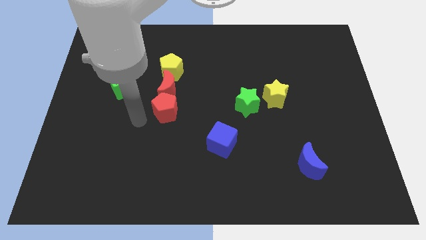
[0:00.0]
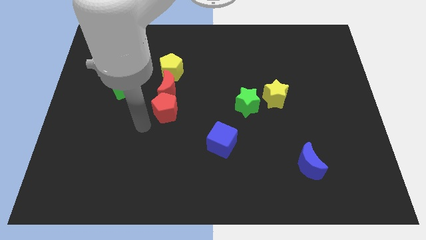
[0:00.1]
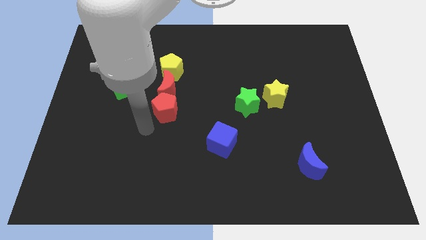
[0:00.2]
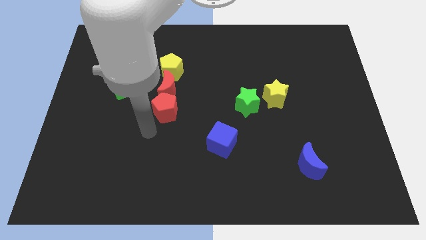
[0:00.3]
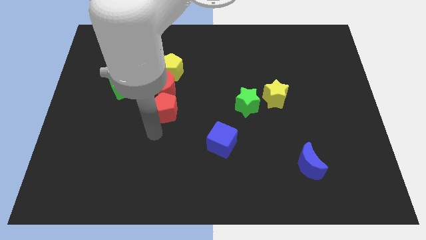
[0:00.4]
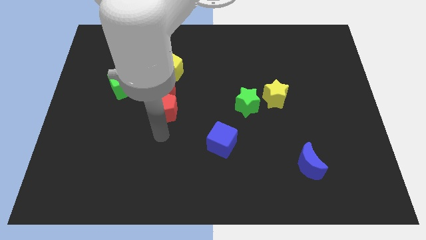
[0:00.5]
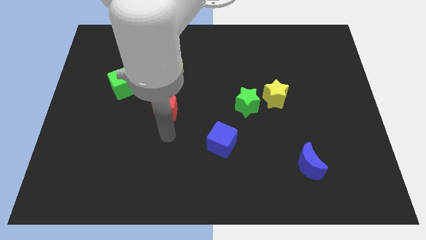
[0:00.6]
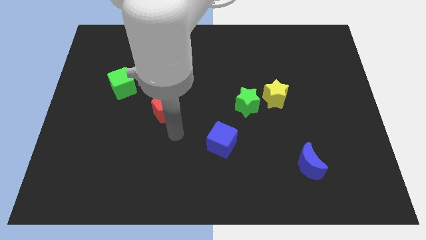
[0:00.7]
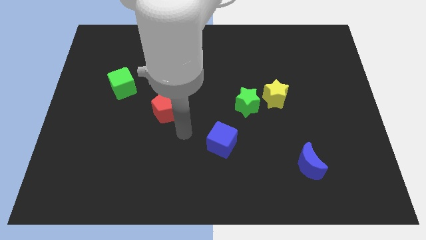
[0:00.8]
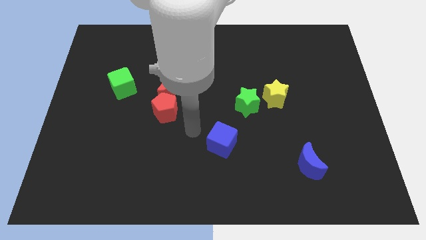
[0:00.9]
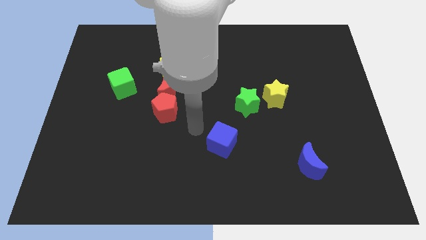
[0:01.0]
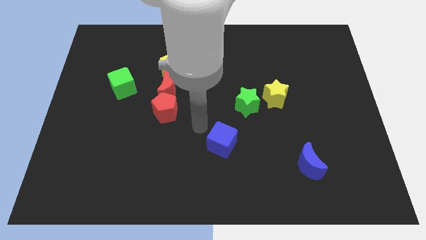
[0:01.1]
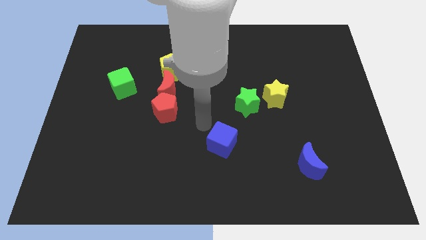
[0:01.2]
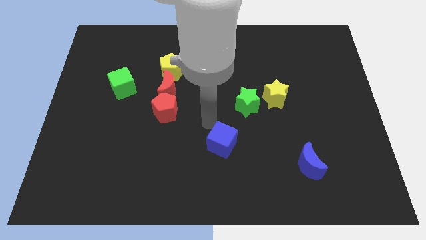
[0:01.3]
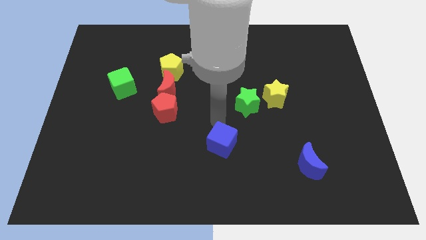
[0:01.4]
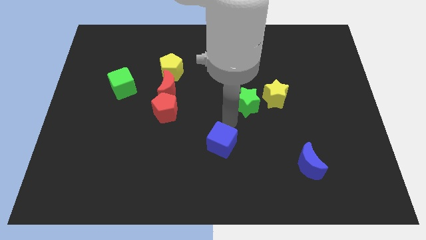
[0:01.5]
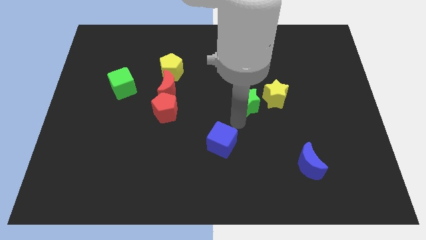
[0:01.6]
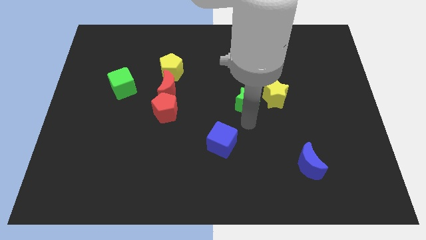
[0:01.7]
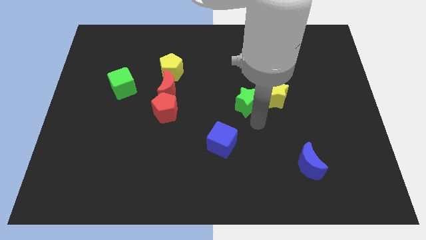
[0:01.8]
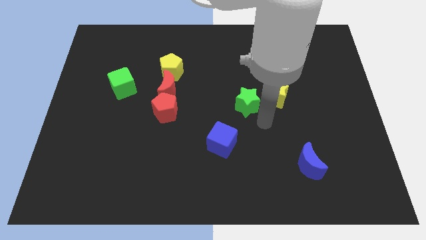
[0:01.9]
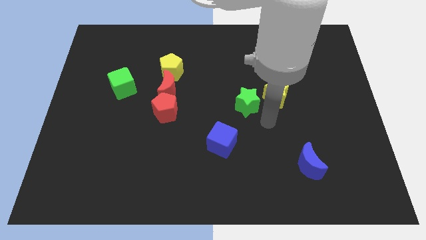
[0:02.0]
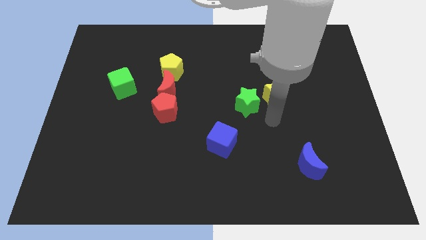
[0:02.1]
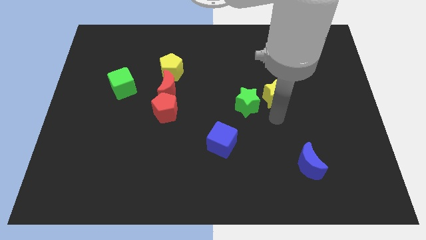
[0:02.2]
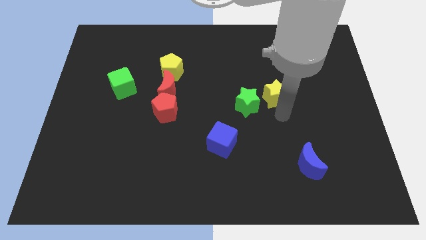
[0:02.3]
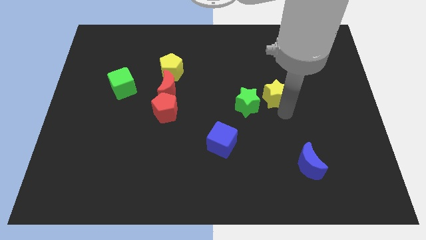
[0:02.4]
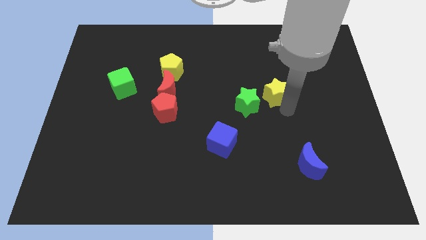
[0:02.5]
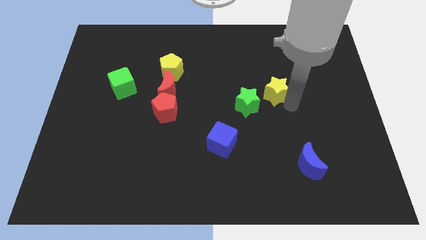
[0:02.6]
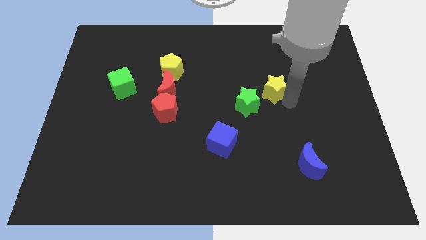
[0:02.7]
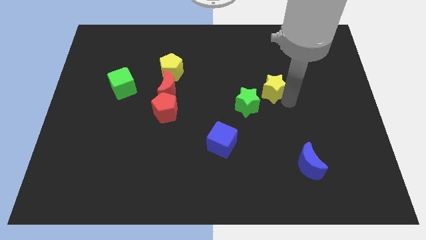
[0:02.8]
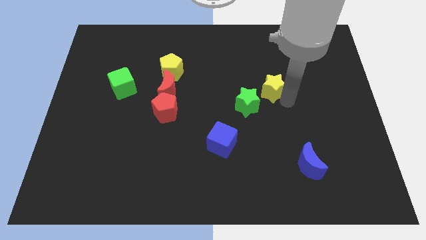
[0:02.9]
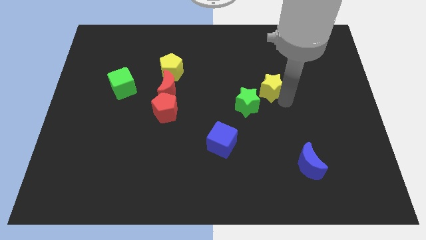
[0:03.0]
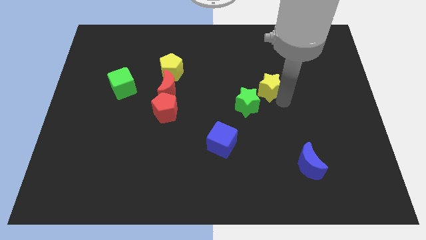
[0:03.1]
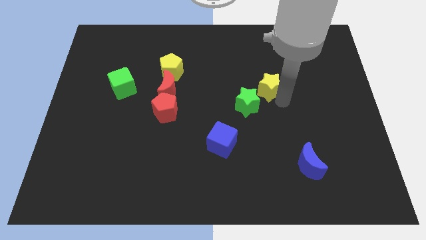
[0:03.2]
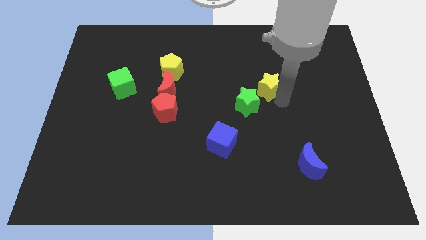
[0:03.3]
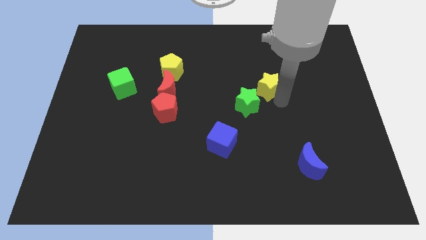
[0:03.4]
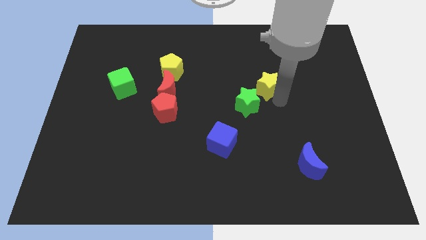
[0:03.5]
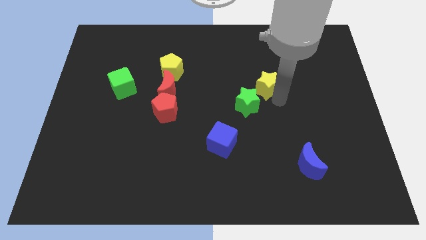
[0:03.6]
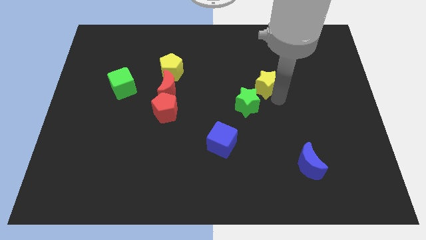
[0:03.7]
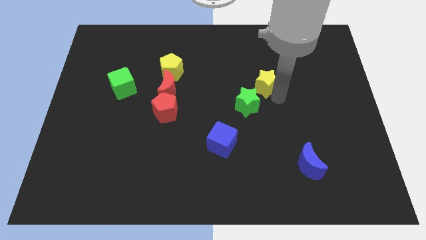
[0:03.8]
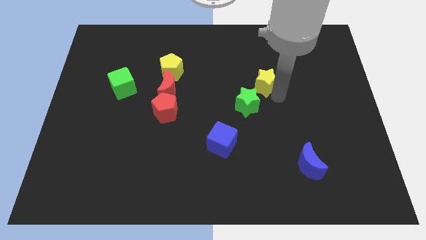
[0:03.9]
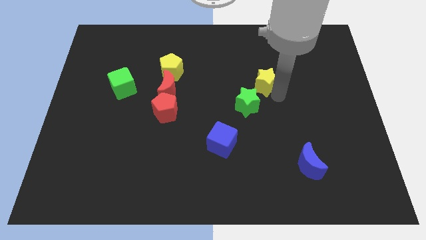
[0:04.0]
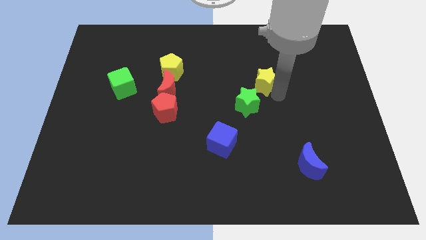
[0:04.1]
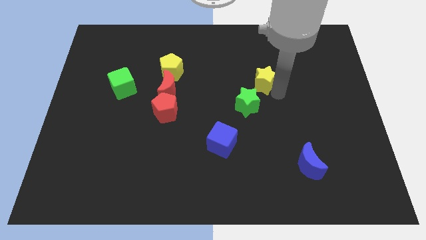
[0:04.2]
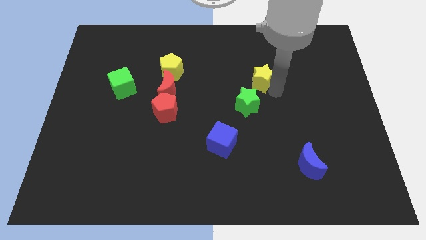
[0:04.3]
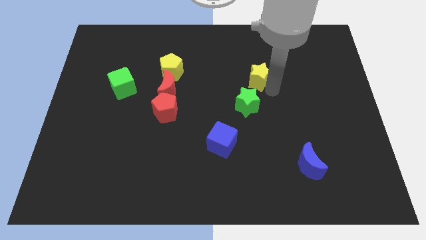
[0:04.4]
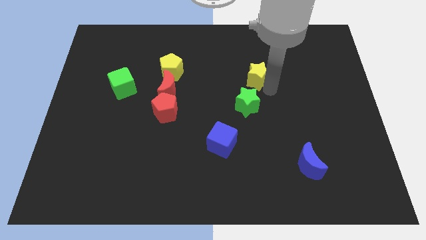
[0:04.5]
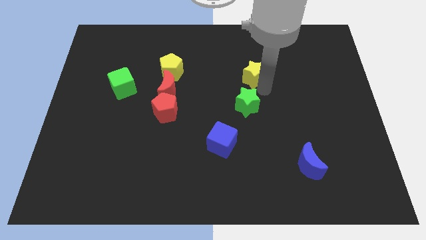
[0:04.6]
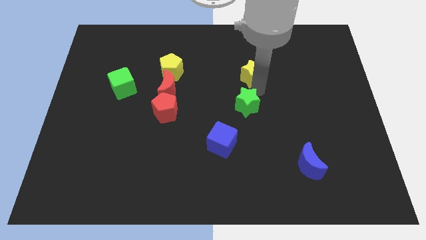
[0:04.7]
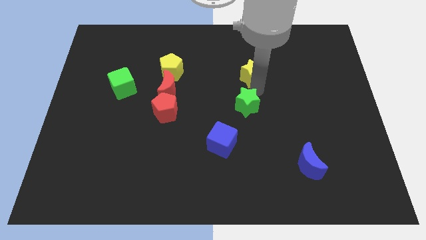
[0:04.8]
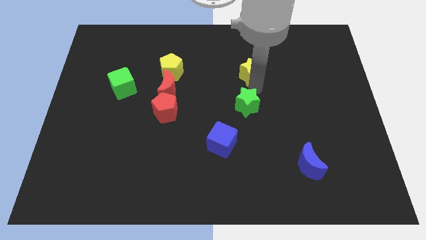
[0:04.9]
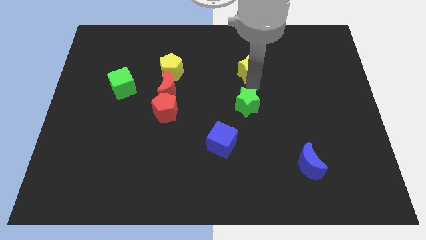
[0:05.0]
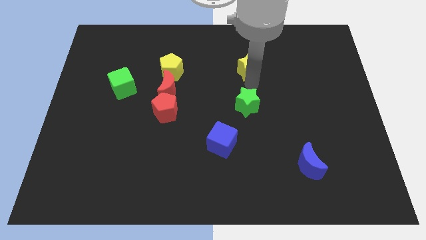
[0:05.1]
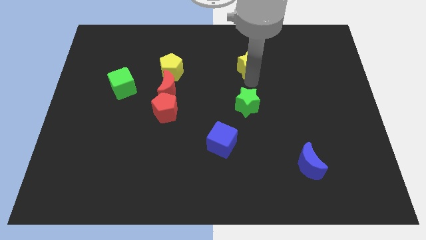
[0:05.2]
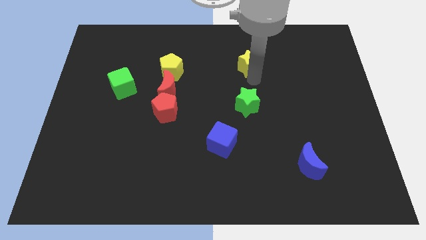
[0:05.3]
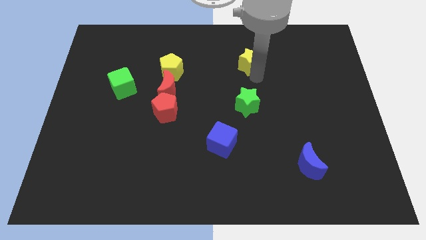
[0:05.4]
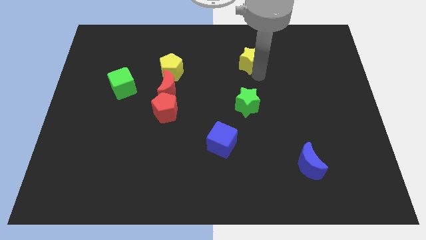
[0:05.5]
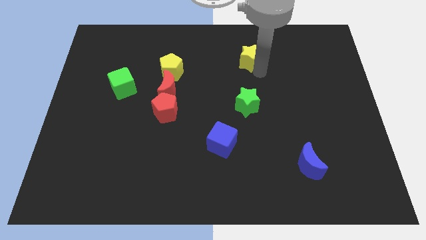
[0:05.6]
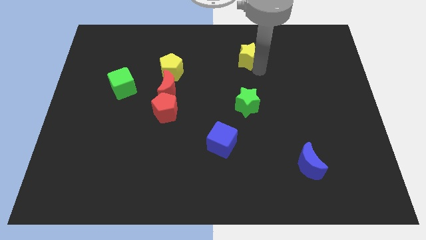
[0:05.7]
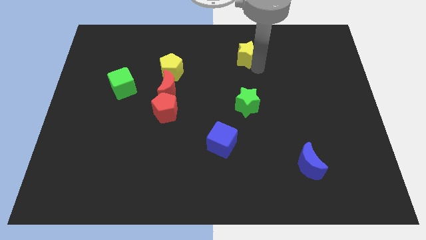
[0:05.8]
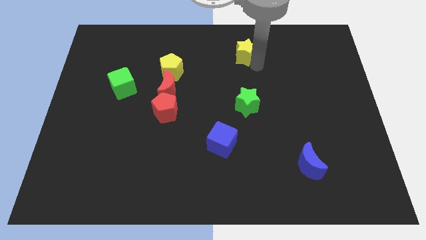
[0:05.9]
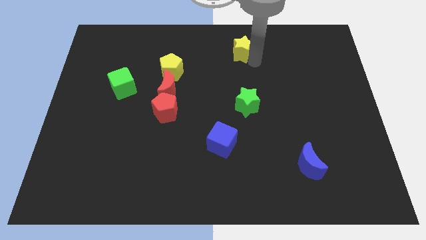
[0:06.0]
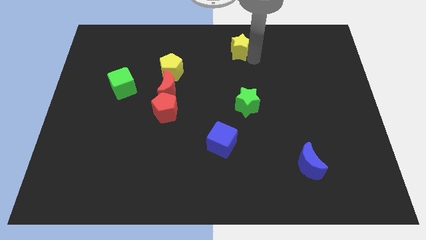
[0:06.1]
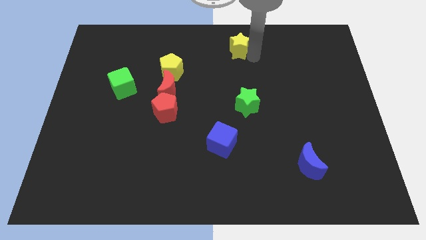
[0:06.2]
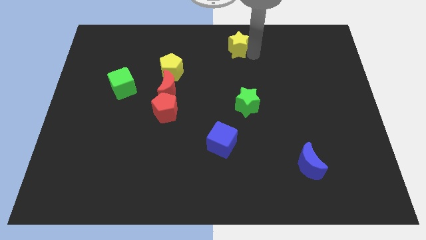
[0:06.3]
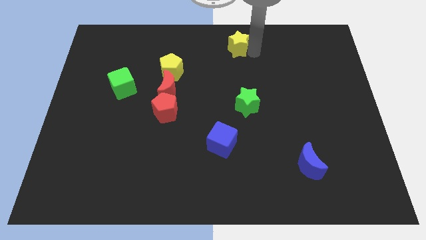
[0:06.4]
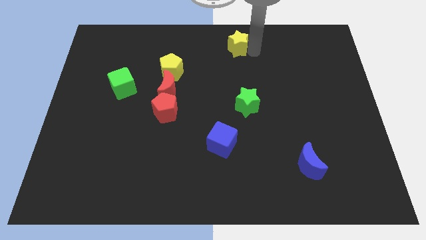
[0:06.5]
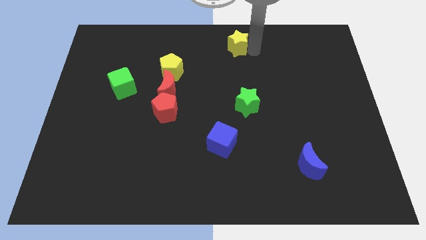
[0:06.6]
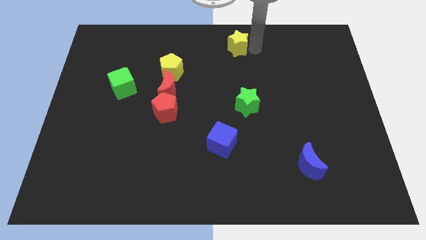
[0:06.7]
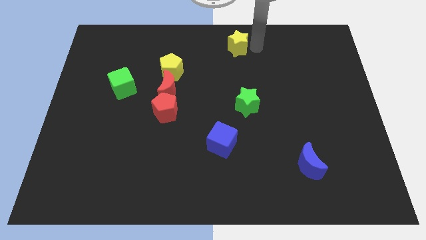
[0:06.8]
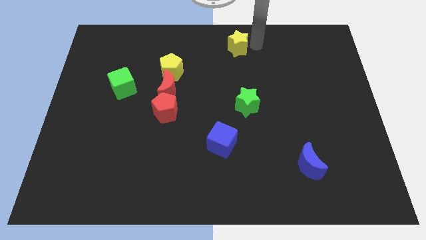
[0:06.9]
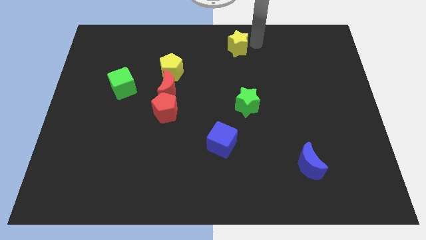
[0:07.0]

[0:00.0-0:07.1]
move the yellow star to the top center of board

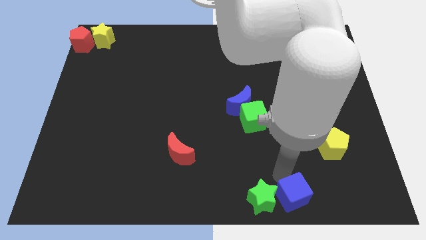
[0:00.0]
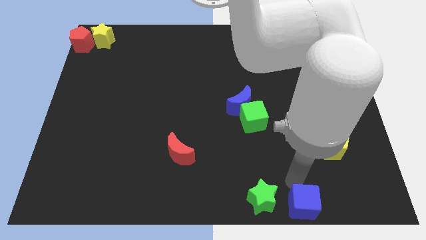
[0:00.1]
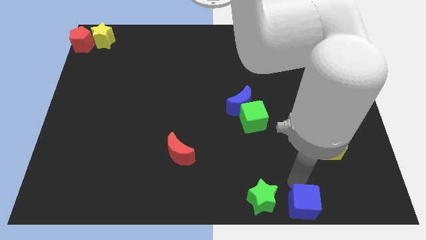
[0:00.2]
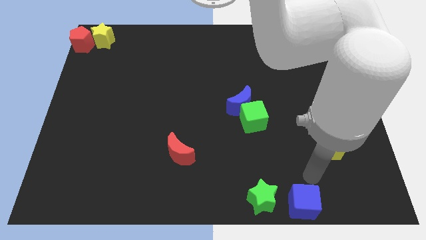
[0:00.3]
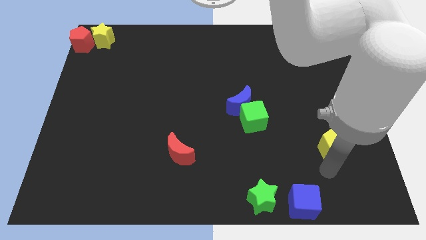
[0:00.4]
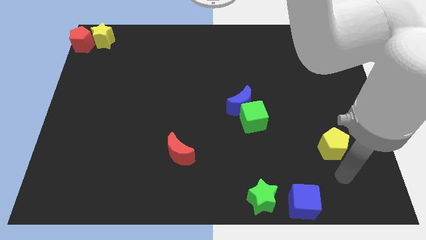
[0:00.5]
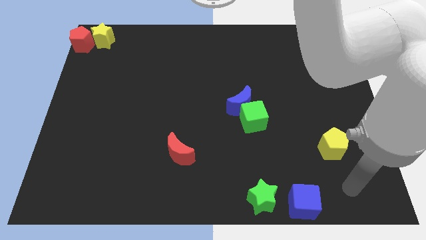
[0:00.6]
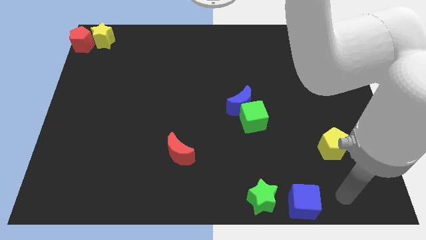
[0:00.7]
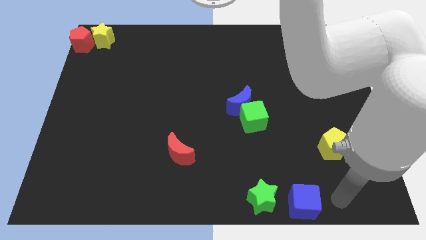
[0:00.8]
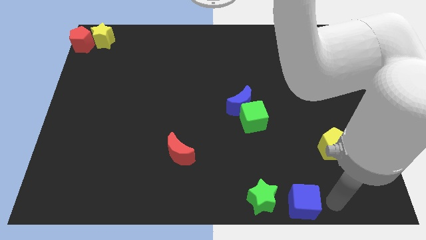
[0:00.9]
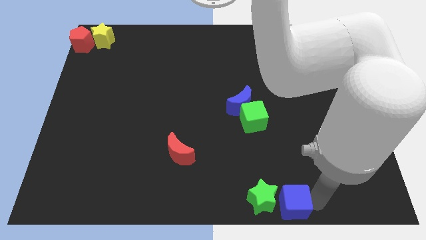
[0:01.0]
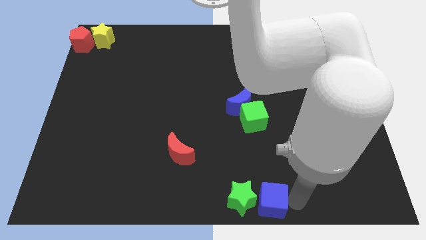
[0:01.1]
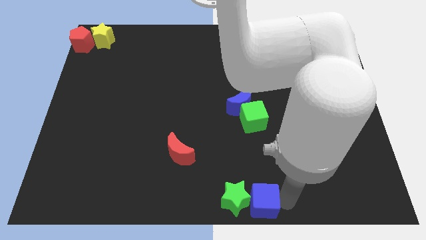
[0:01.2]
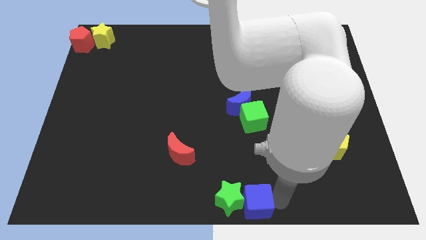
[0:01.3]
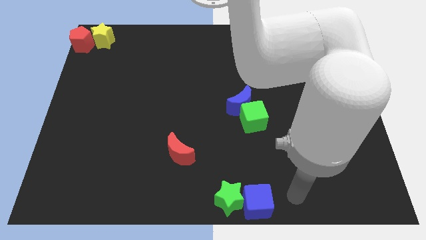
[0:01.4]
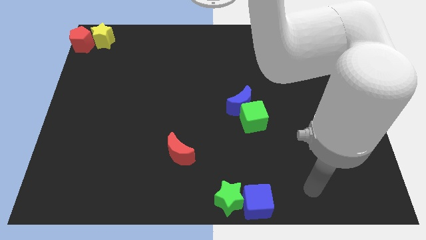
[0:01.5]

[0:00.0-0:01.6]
move the green star and the blue cube to the bottom center of the board

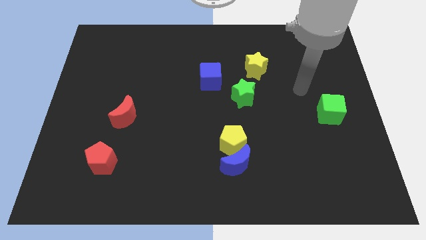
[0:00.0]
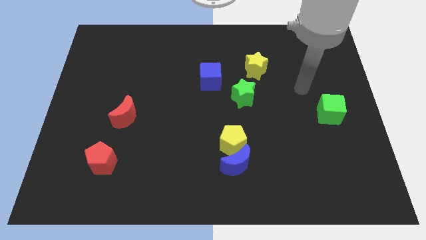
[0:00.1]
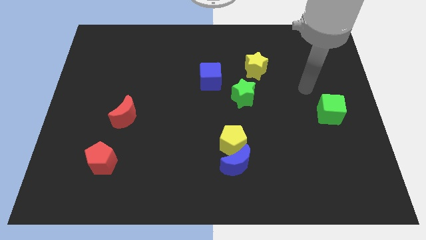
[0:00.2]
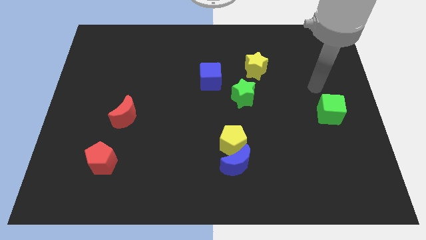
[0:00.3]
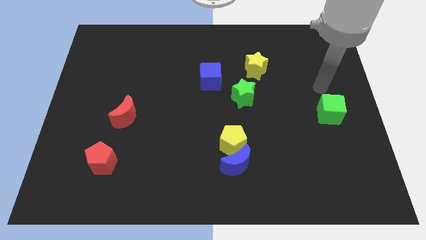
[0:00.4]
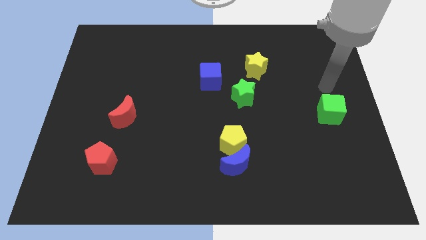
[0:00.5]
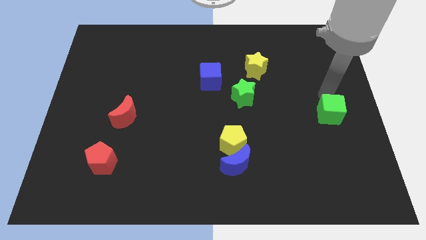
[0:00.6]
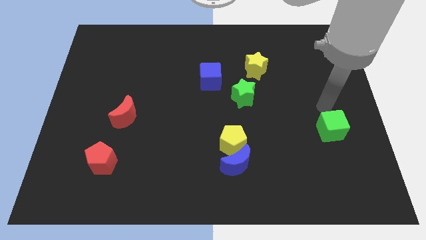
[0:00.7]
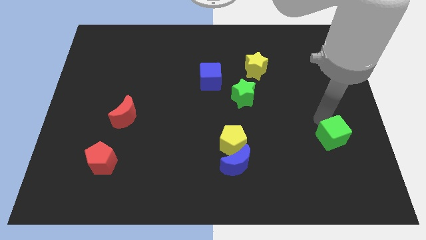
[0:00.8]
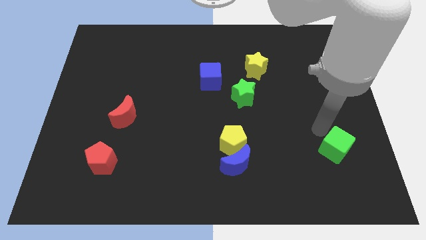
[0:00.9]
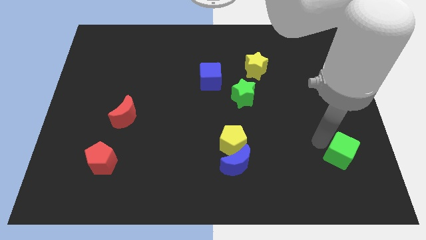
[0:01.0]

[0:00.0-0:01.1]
push the green cube towards the bottom right side of the board
